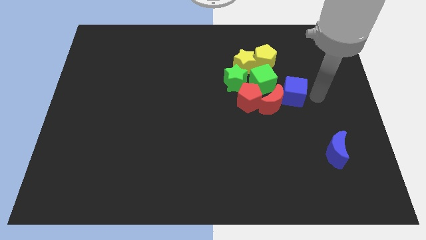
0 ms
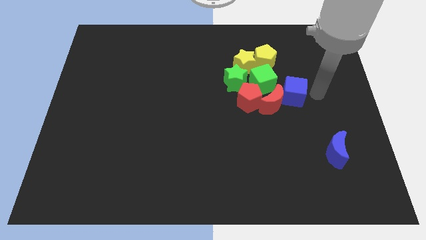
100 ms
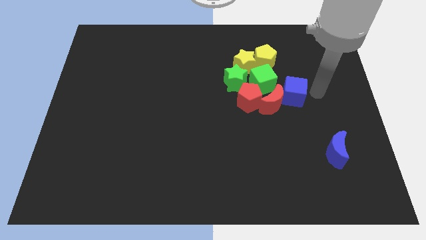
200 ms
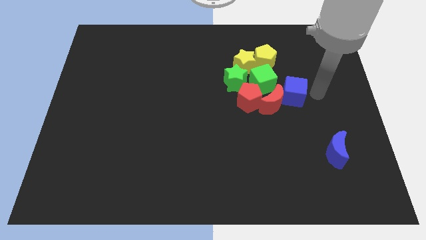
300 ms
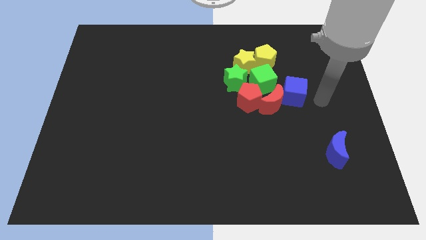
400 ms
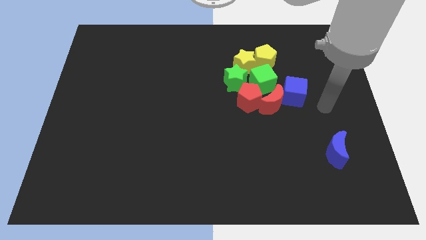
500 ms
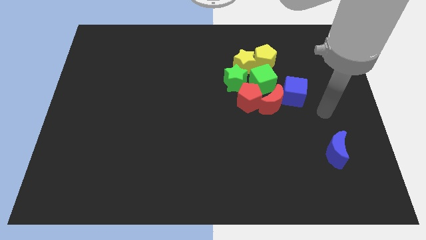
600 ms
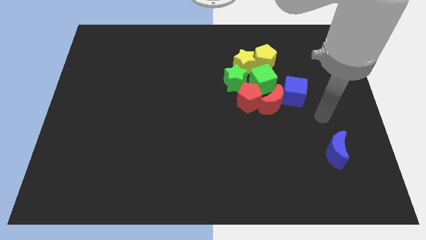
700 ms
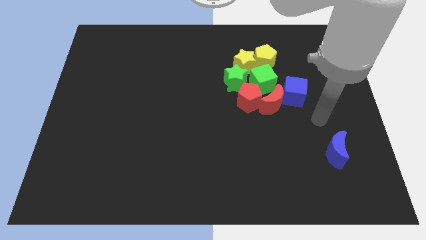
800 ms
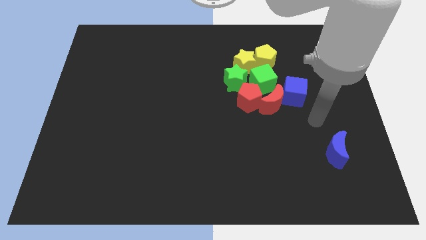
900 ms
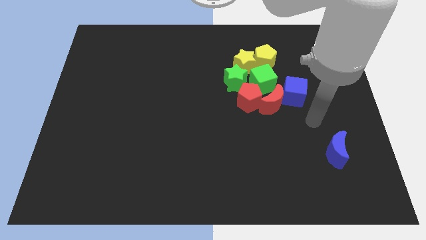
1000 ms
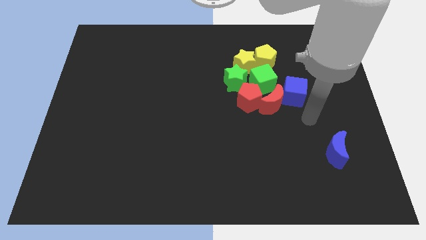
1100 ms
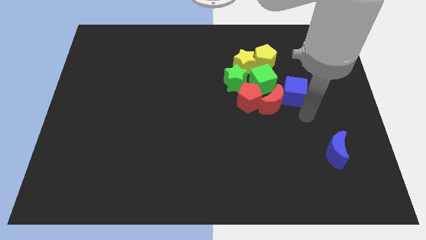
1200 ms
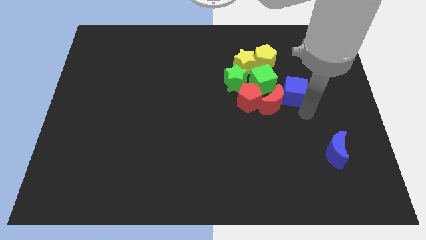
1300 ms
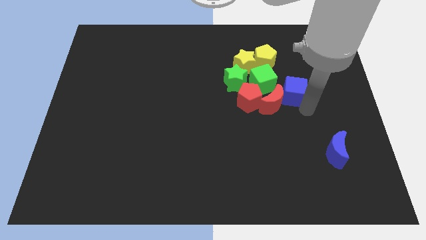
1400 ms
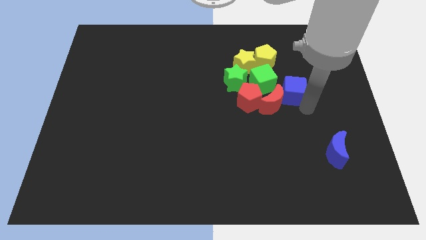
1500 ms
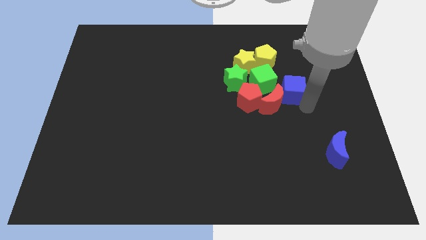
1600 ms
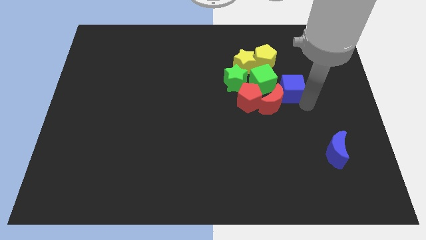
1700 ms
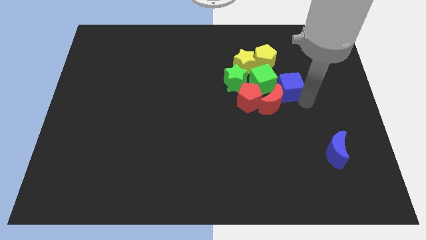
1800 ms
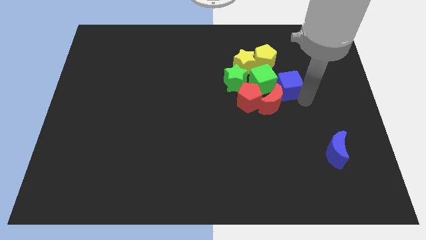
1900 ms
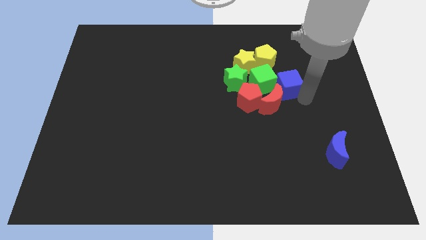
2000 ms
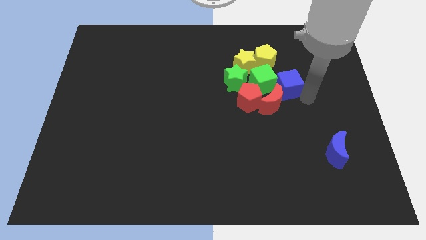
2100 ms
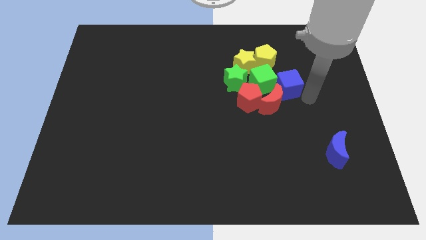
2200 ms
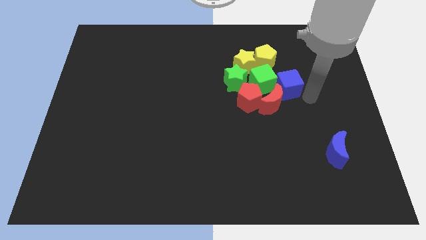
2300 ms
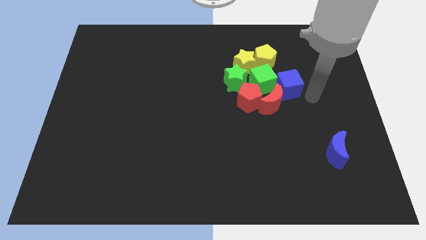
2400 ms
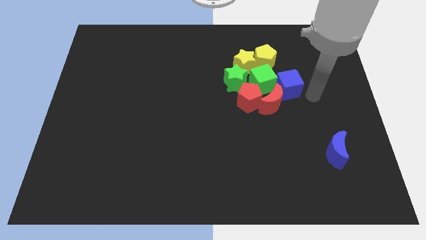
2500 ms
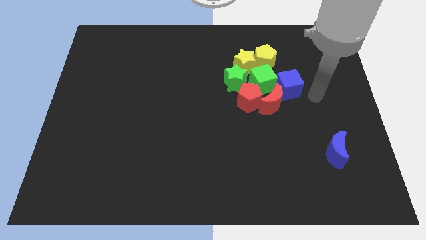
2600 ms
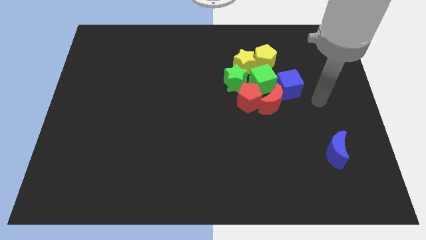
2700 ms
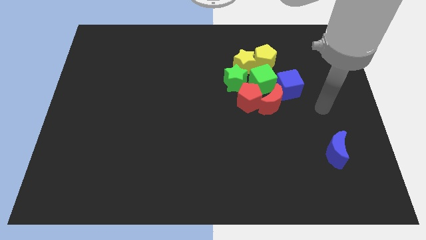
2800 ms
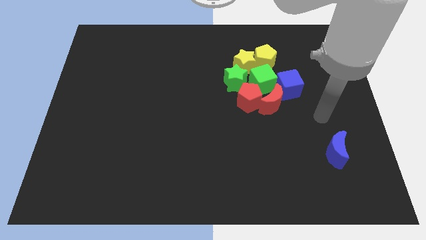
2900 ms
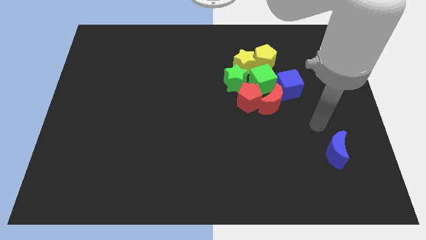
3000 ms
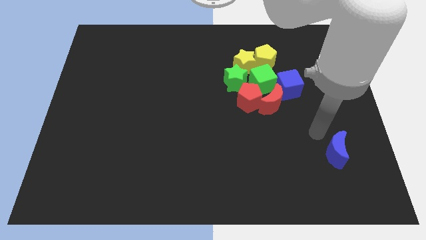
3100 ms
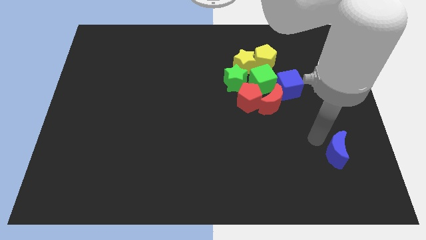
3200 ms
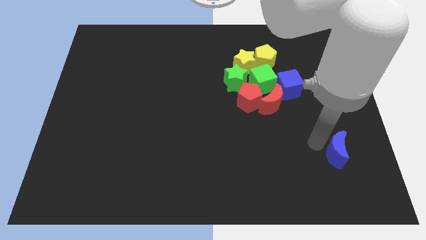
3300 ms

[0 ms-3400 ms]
place the green cube to the bottom right of green cube

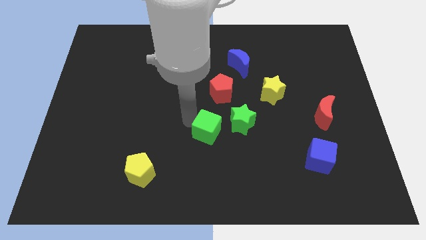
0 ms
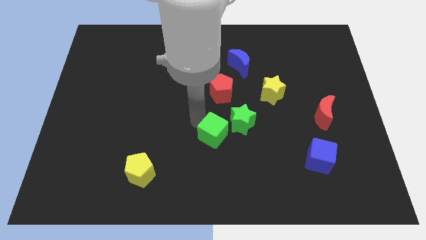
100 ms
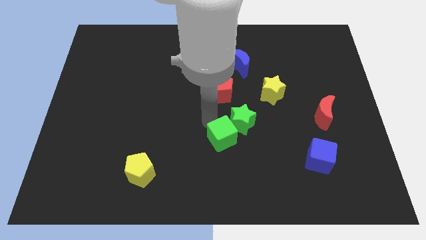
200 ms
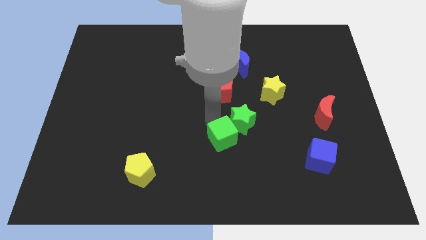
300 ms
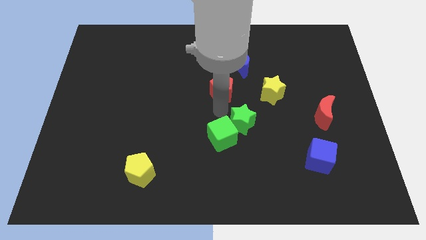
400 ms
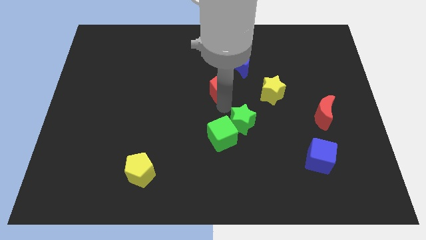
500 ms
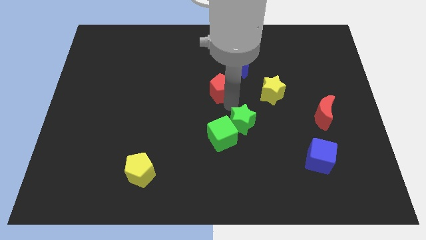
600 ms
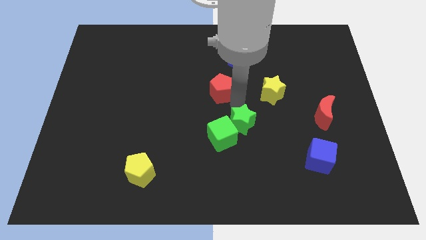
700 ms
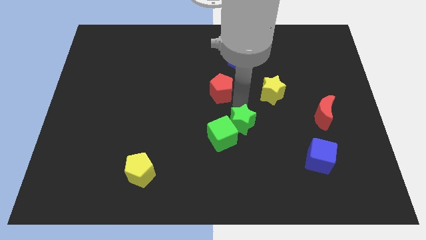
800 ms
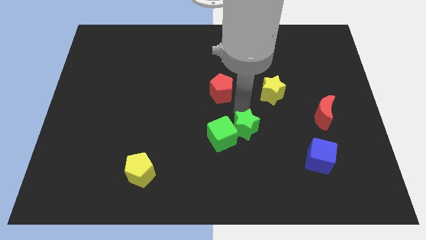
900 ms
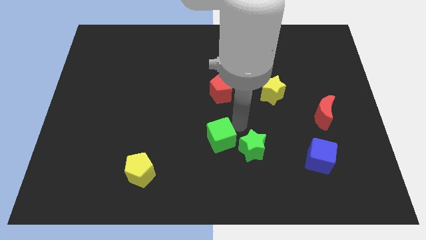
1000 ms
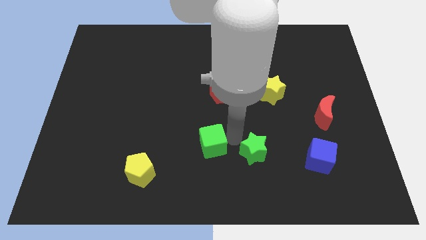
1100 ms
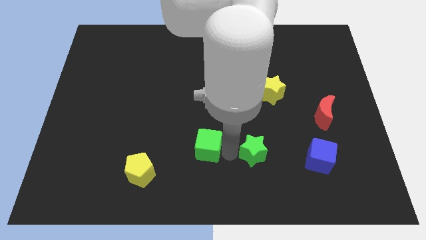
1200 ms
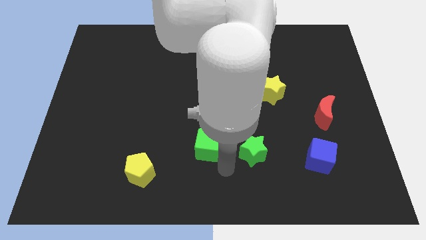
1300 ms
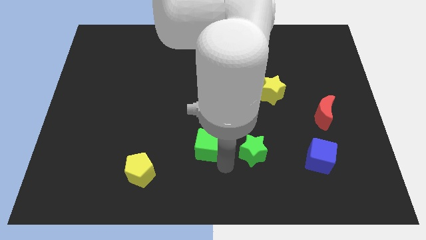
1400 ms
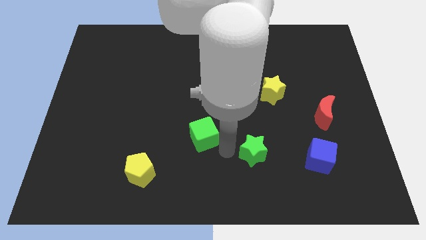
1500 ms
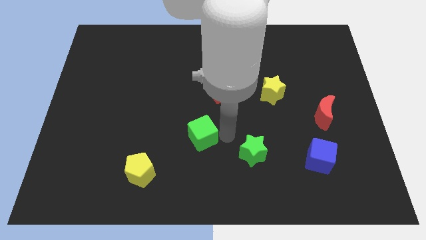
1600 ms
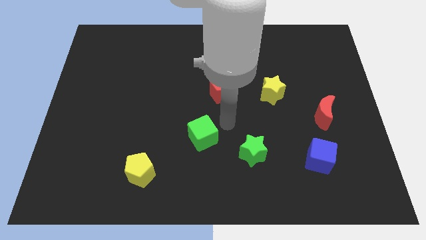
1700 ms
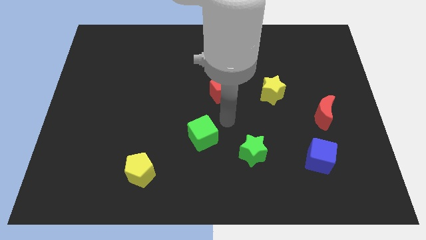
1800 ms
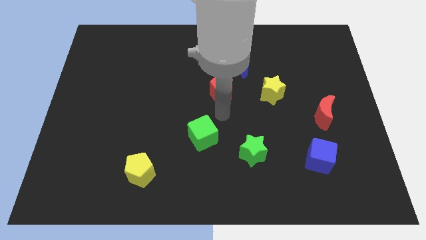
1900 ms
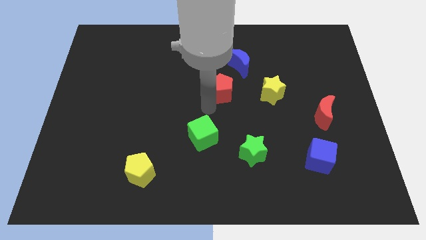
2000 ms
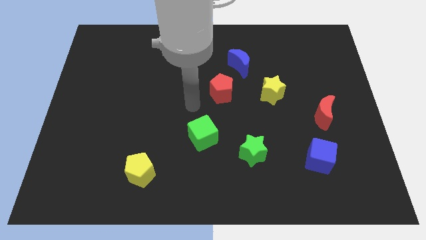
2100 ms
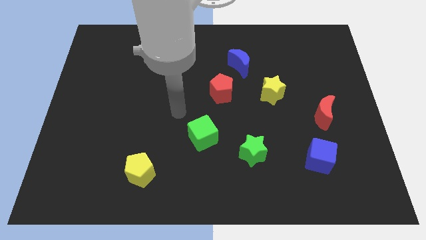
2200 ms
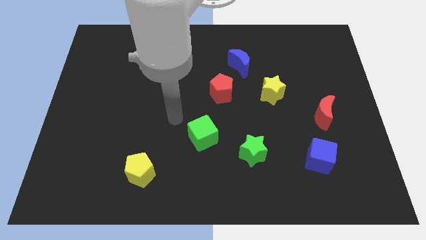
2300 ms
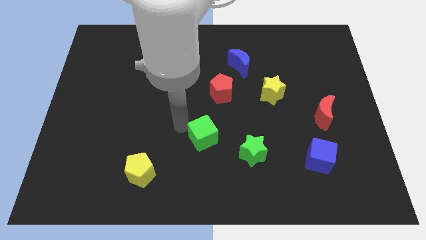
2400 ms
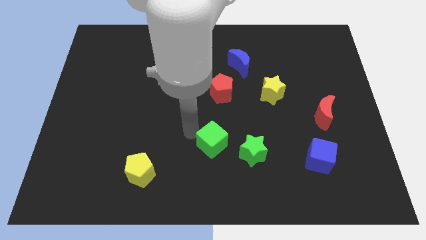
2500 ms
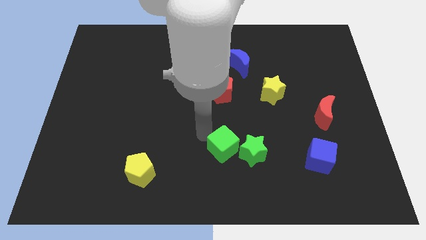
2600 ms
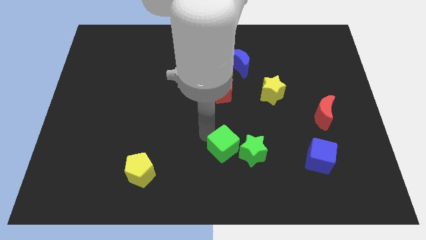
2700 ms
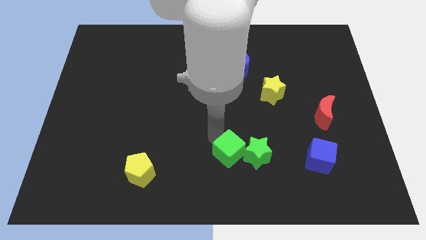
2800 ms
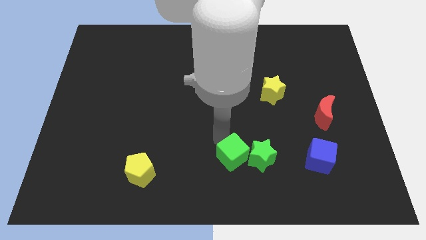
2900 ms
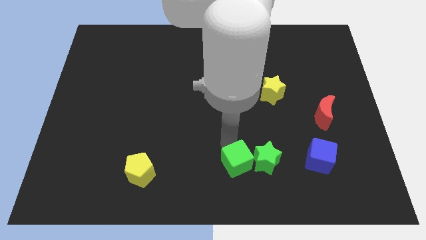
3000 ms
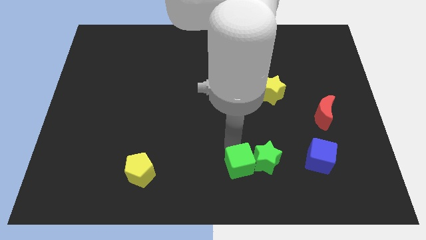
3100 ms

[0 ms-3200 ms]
slide green blocks towards bottom

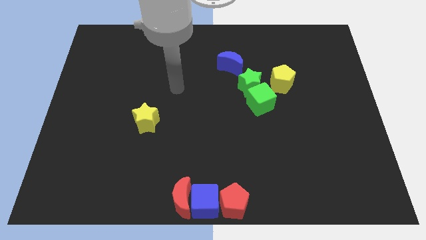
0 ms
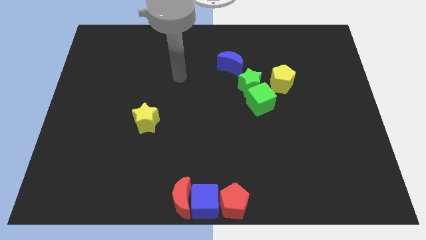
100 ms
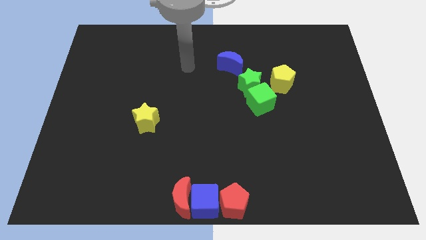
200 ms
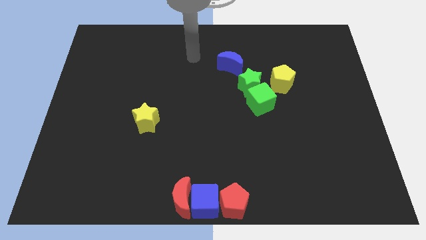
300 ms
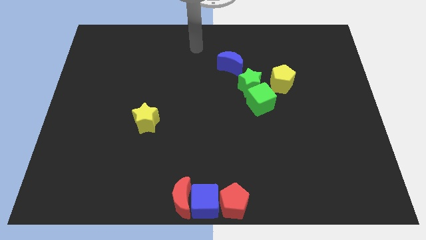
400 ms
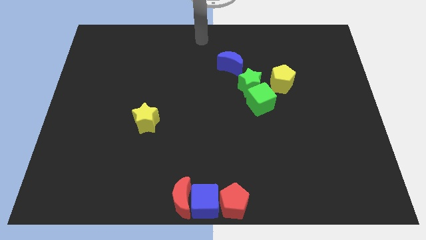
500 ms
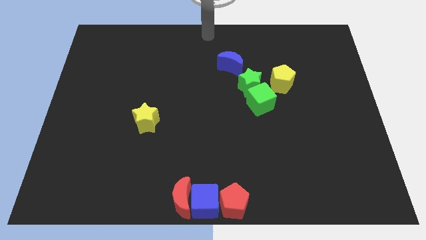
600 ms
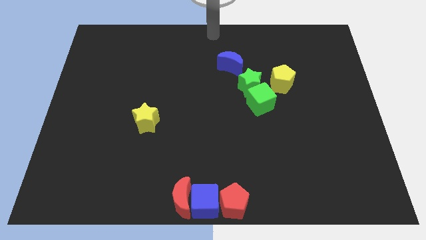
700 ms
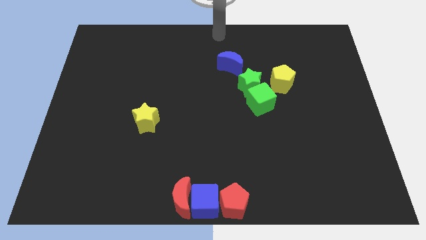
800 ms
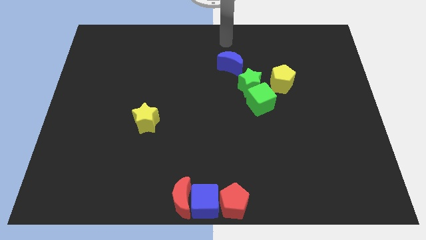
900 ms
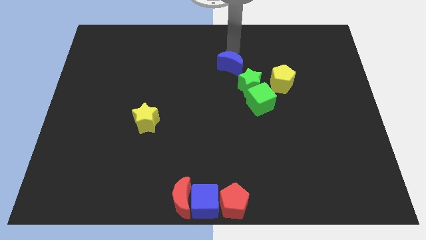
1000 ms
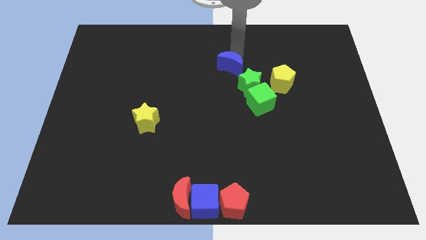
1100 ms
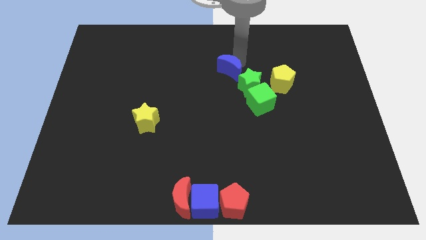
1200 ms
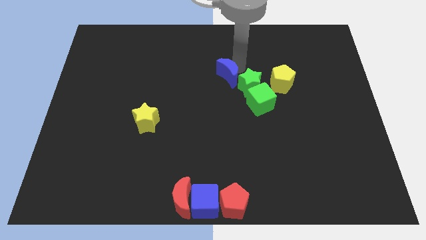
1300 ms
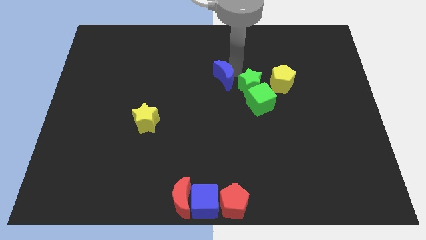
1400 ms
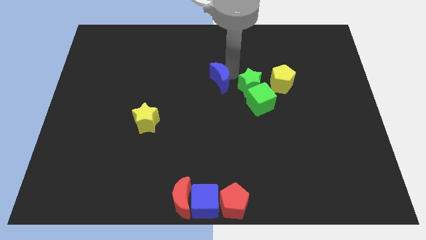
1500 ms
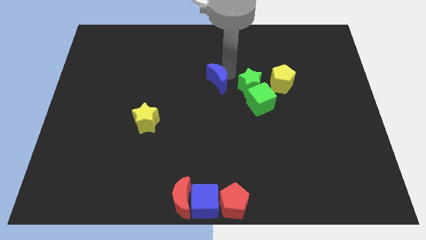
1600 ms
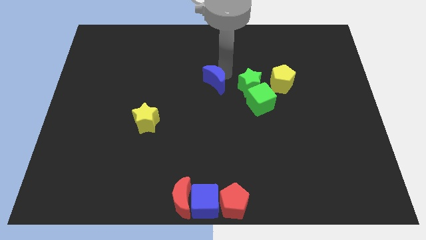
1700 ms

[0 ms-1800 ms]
move the blue crescent to the left of the green star

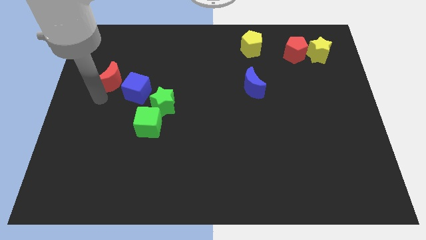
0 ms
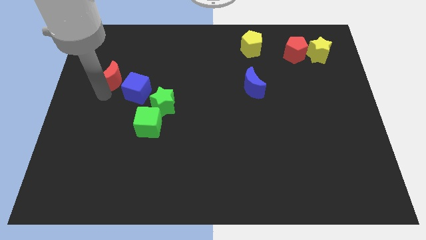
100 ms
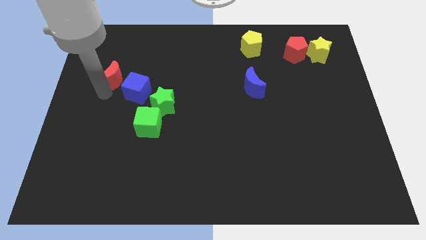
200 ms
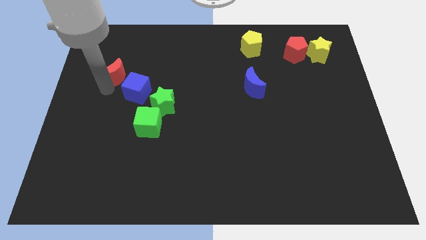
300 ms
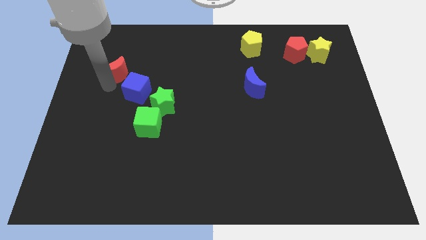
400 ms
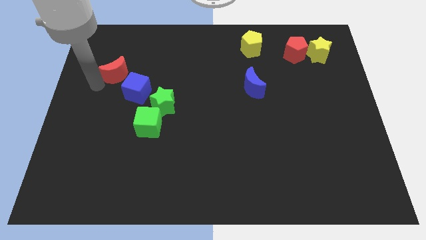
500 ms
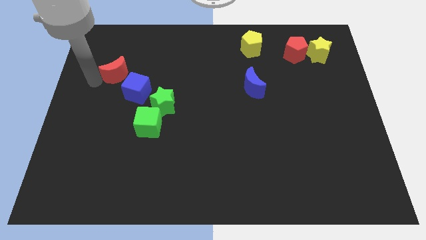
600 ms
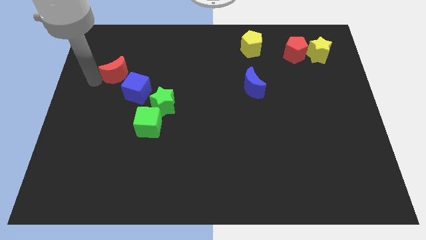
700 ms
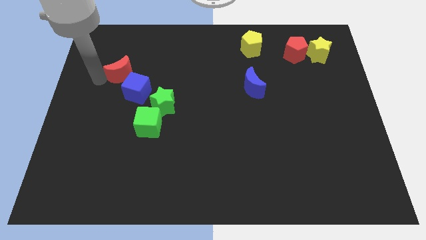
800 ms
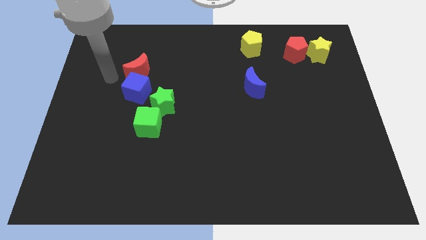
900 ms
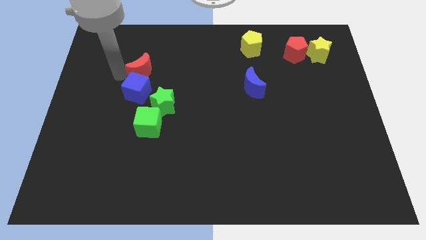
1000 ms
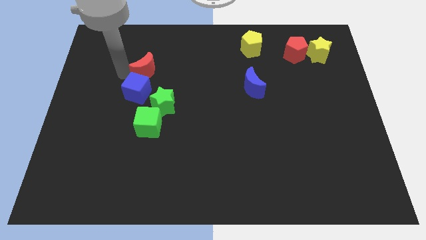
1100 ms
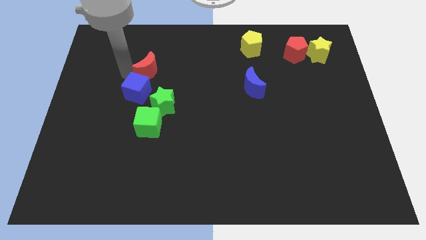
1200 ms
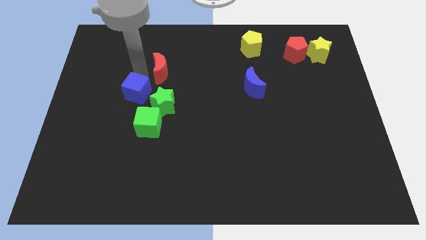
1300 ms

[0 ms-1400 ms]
put the red crescent above the blue cube
